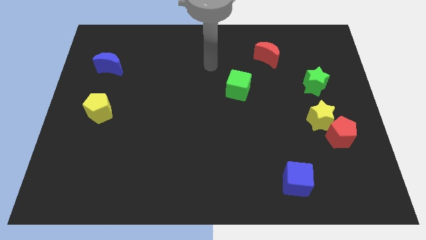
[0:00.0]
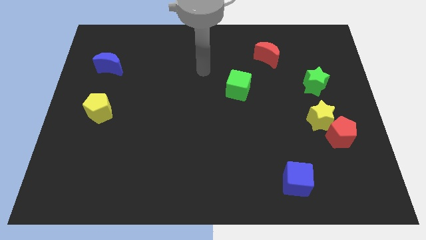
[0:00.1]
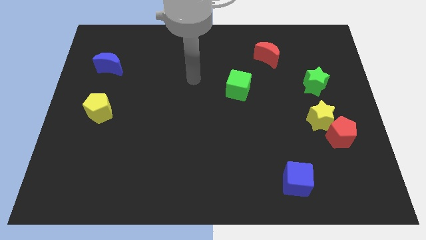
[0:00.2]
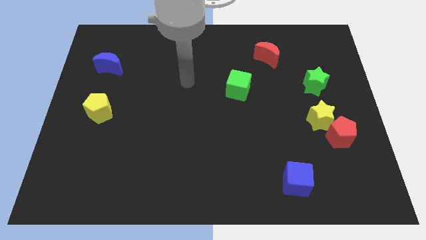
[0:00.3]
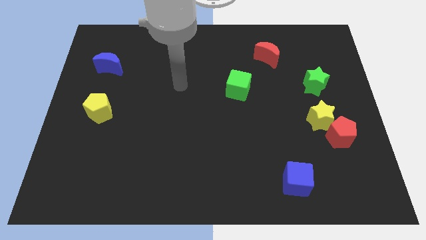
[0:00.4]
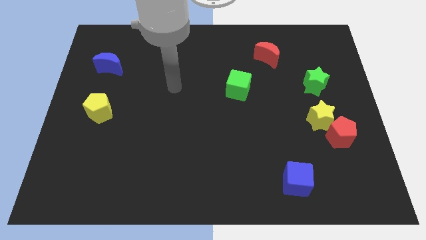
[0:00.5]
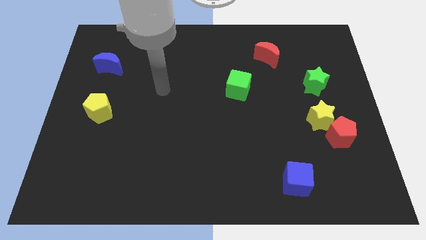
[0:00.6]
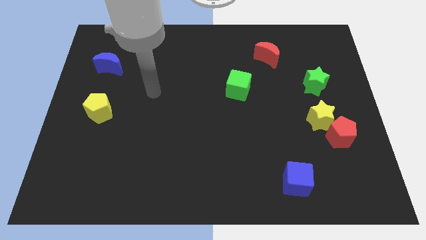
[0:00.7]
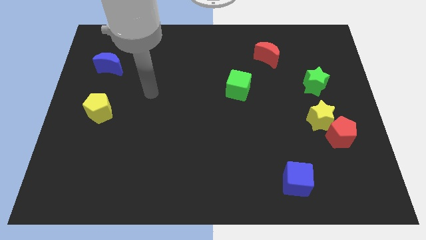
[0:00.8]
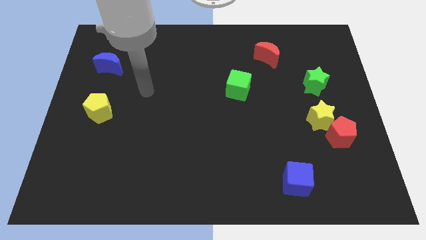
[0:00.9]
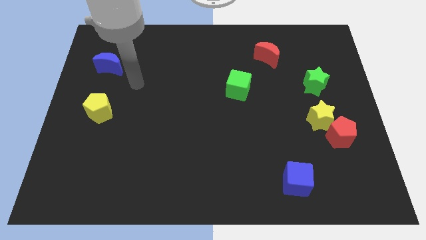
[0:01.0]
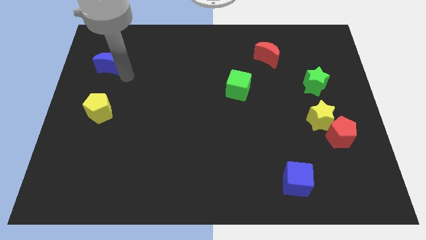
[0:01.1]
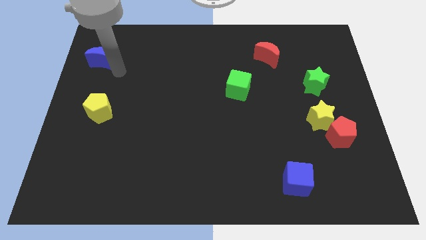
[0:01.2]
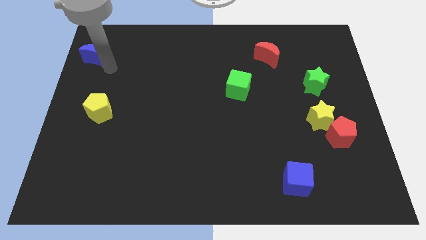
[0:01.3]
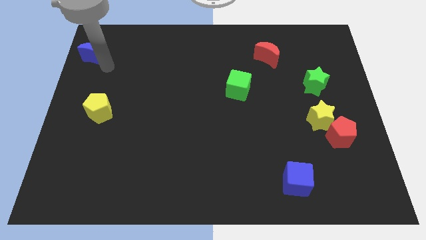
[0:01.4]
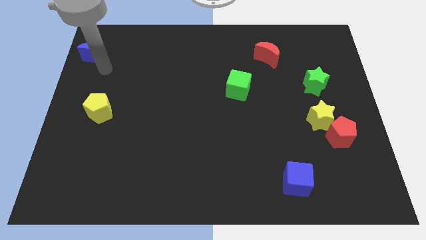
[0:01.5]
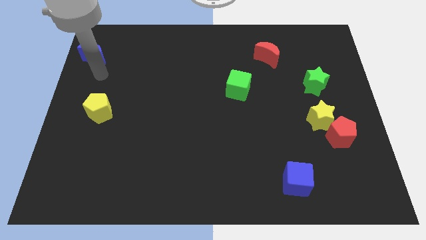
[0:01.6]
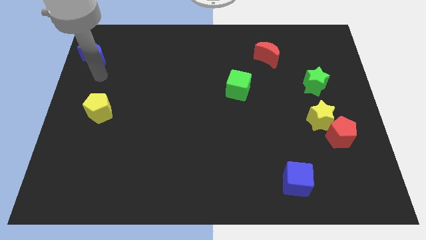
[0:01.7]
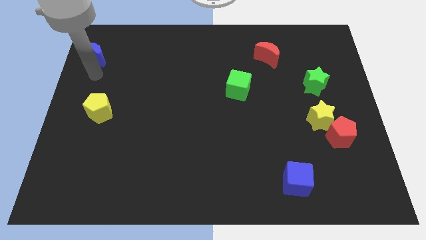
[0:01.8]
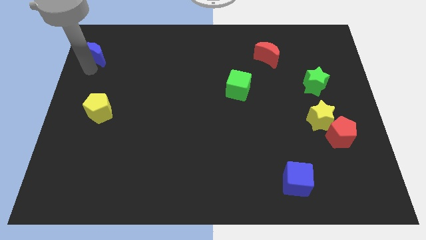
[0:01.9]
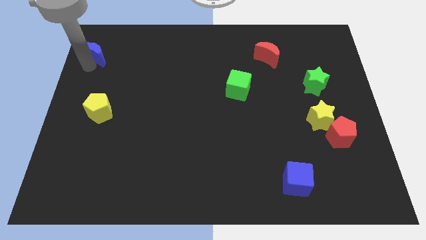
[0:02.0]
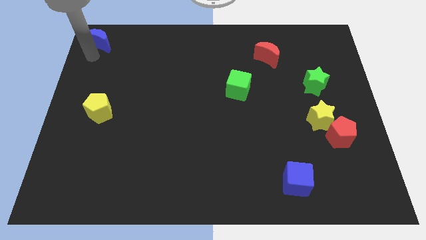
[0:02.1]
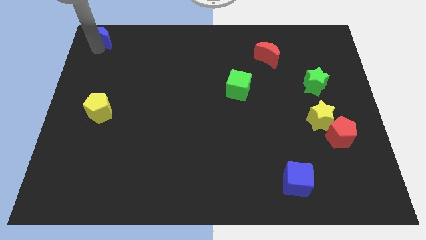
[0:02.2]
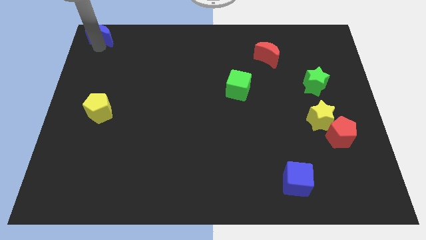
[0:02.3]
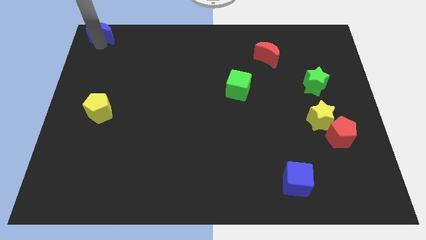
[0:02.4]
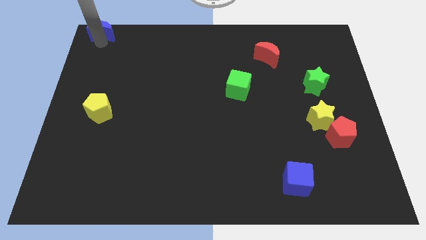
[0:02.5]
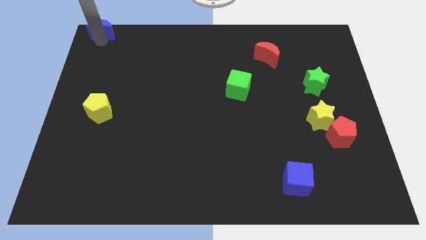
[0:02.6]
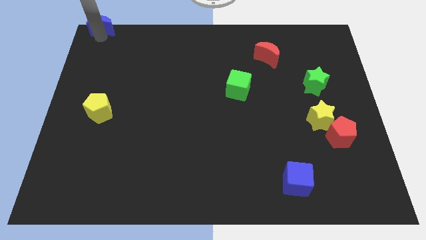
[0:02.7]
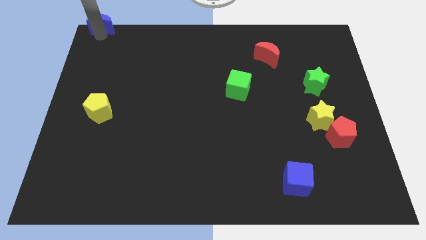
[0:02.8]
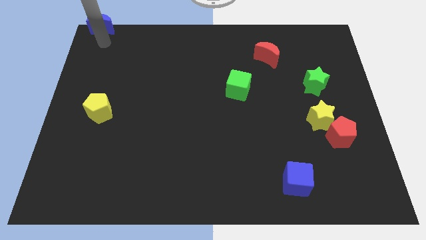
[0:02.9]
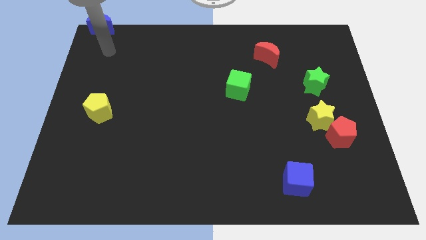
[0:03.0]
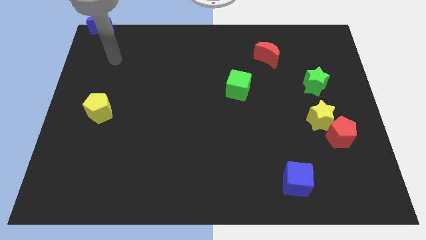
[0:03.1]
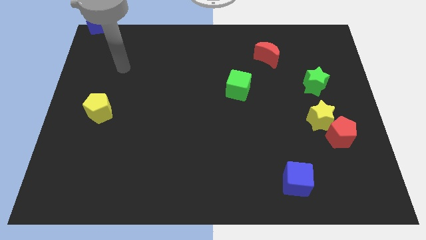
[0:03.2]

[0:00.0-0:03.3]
push the blue moon at the top left corner of the board

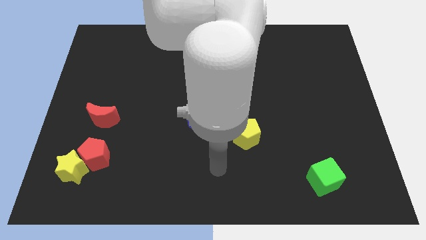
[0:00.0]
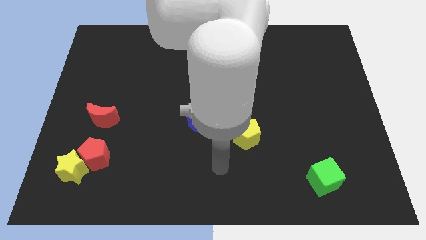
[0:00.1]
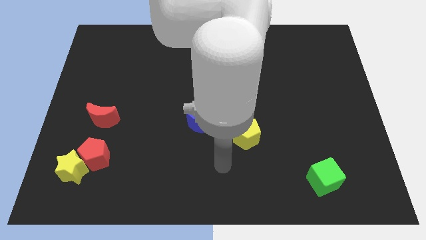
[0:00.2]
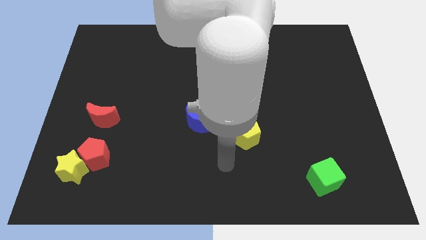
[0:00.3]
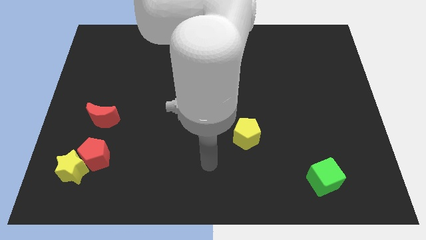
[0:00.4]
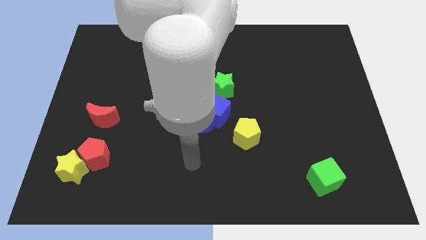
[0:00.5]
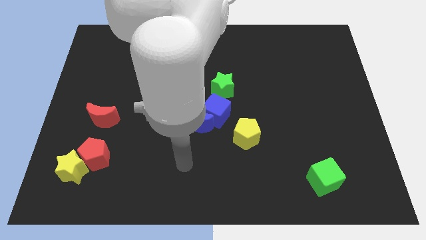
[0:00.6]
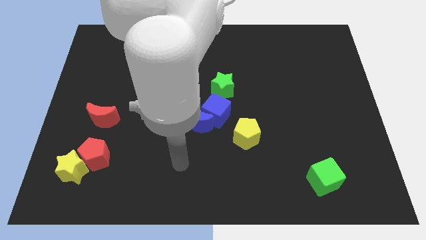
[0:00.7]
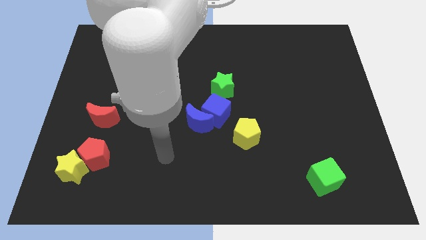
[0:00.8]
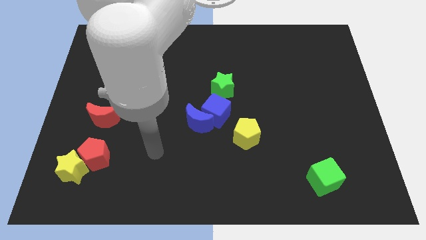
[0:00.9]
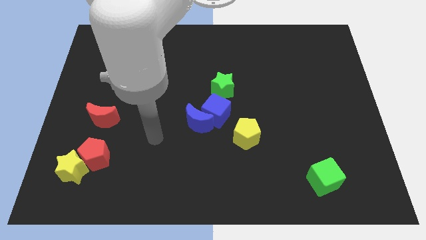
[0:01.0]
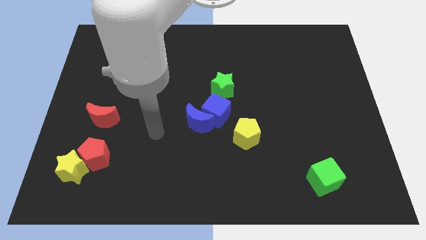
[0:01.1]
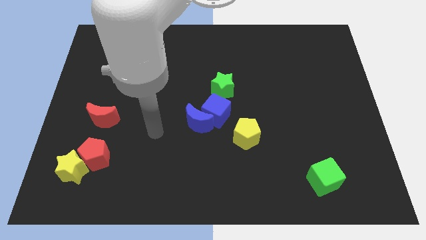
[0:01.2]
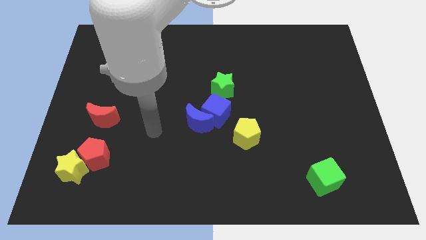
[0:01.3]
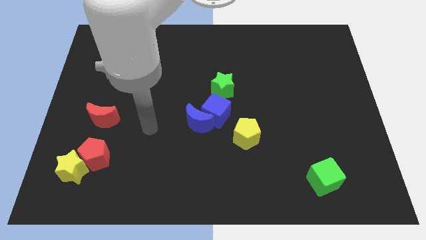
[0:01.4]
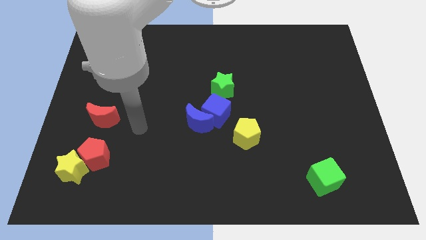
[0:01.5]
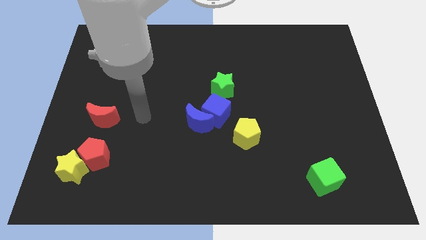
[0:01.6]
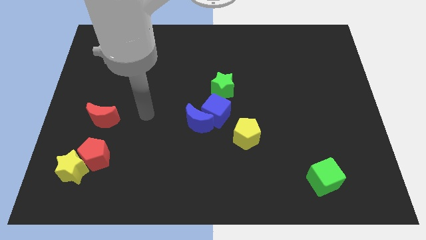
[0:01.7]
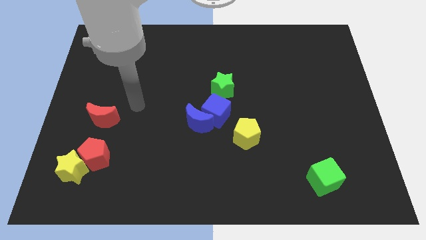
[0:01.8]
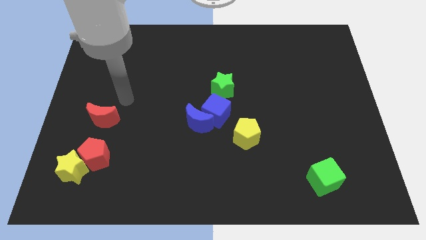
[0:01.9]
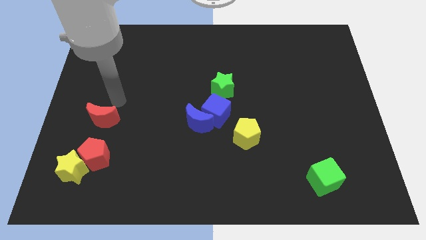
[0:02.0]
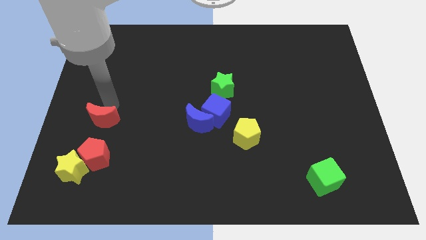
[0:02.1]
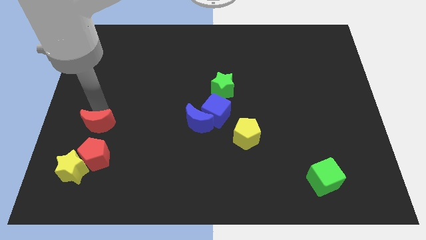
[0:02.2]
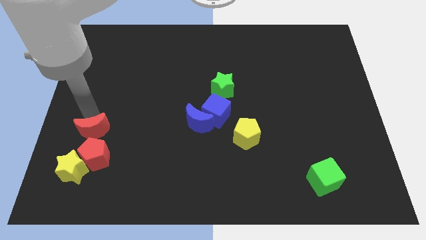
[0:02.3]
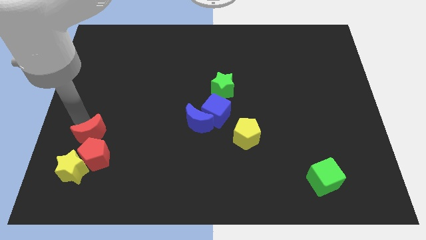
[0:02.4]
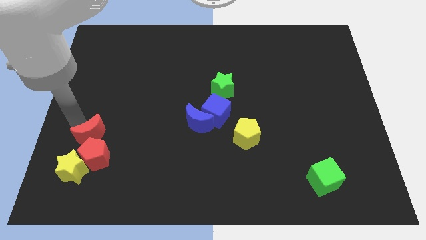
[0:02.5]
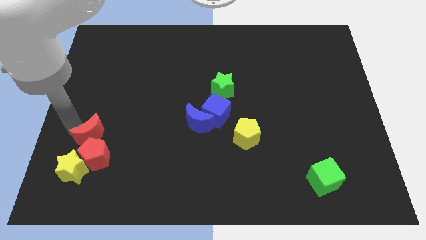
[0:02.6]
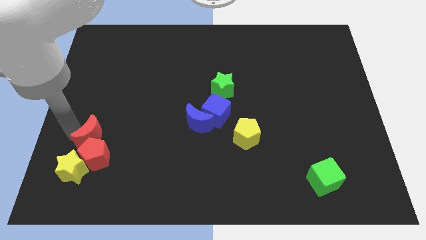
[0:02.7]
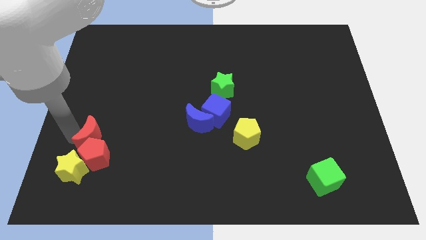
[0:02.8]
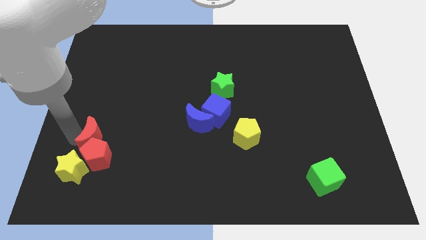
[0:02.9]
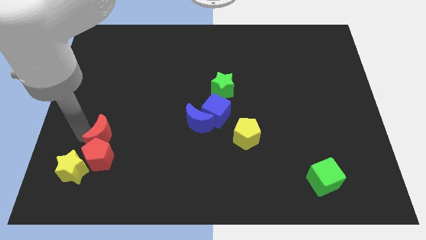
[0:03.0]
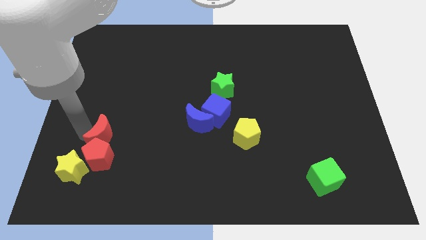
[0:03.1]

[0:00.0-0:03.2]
move red crescent into the red pentagon

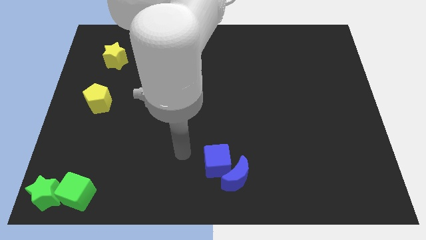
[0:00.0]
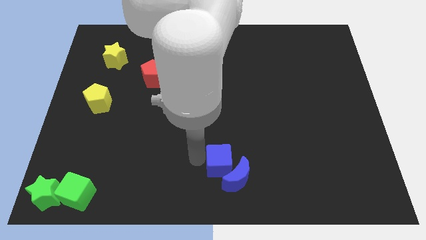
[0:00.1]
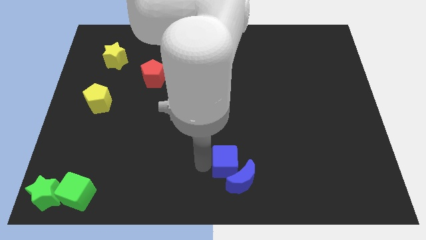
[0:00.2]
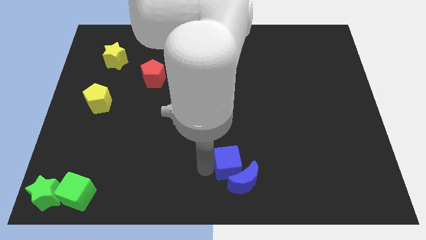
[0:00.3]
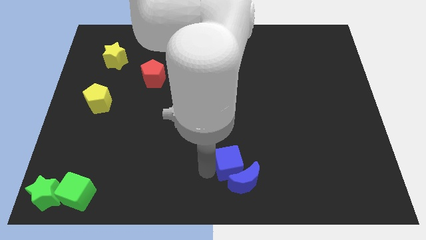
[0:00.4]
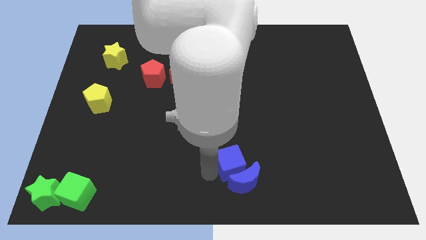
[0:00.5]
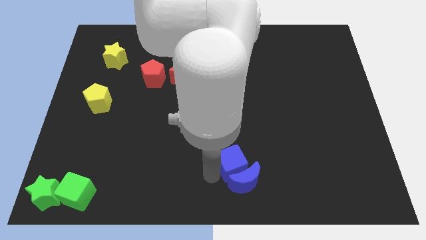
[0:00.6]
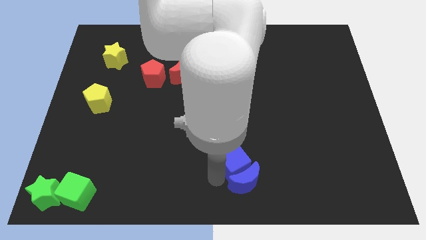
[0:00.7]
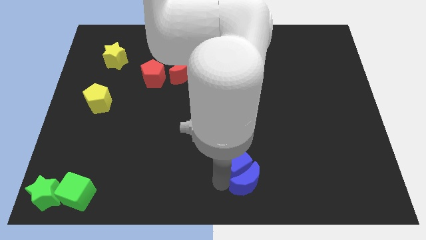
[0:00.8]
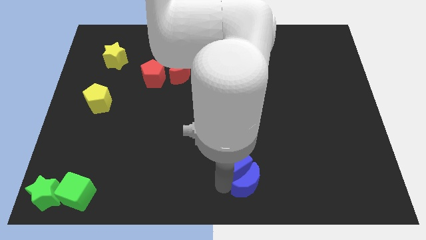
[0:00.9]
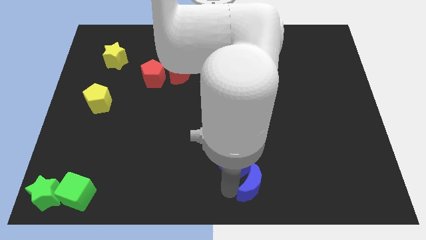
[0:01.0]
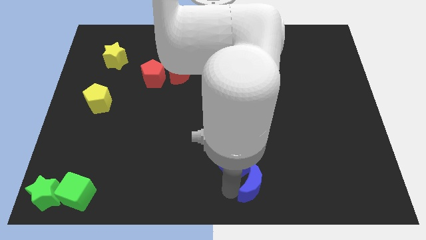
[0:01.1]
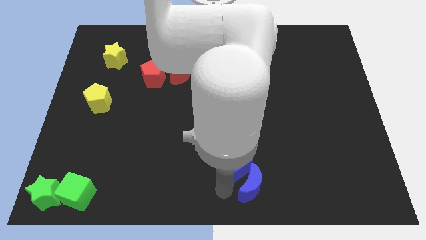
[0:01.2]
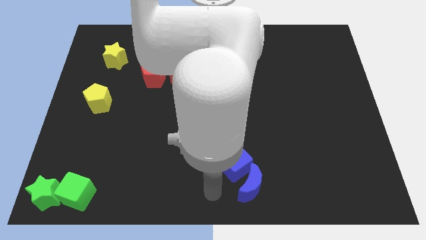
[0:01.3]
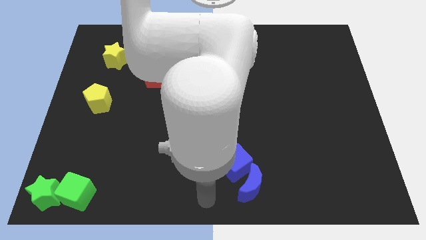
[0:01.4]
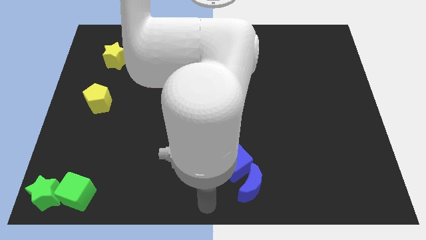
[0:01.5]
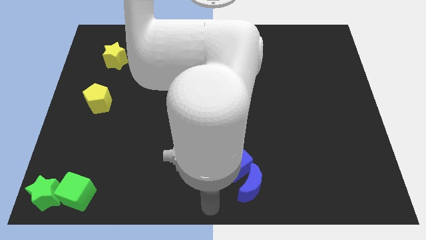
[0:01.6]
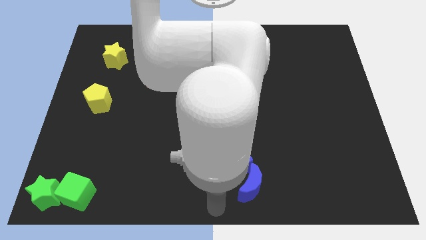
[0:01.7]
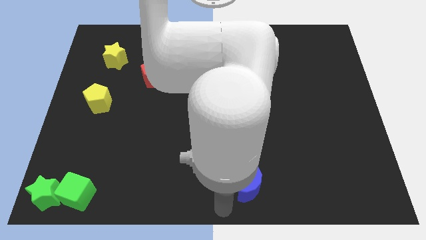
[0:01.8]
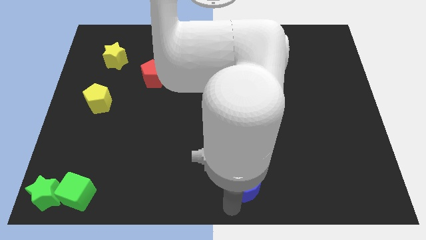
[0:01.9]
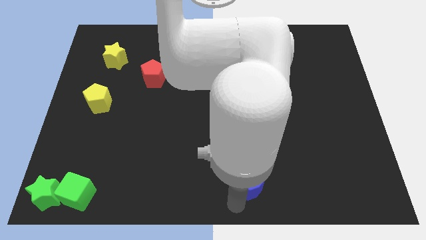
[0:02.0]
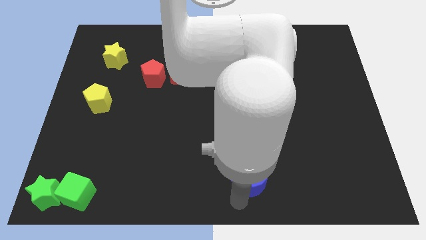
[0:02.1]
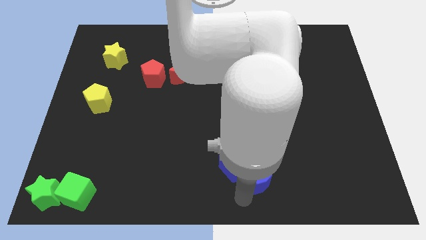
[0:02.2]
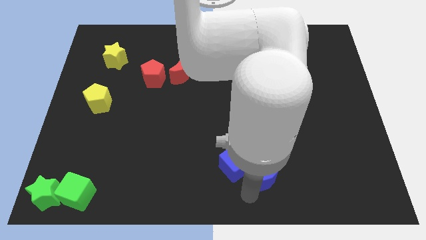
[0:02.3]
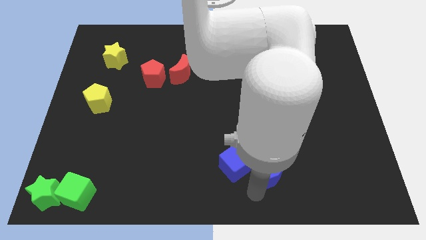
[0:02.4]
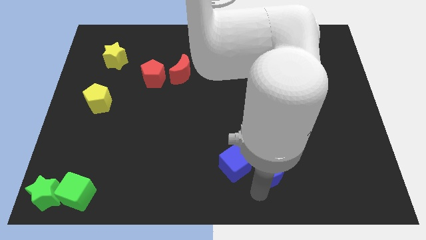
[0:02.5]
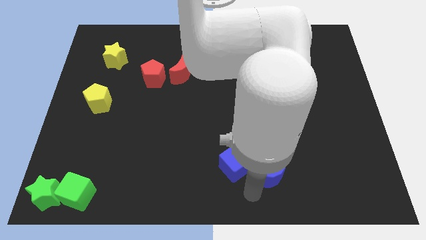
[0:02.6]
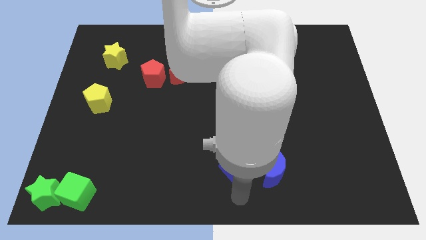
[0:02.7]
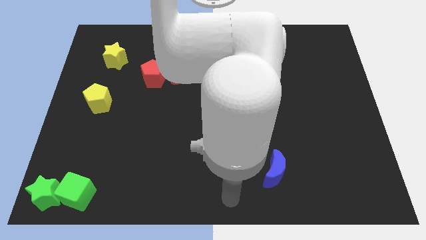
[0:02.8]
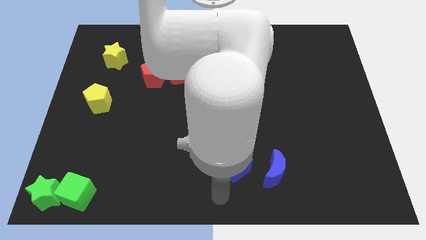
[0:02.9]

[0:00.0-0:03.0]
place blue crescent beside blue cube
